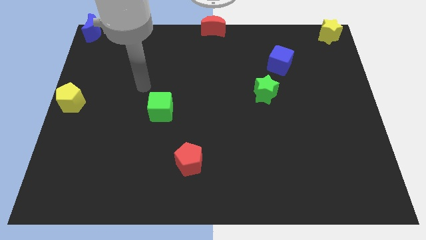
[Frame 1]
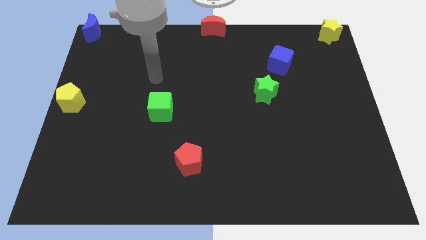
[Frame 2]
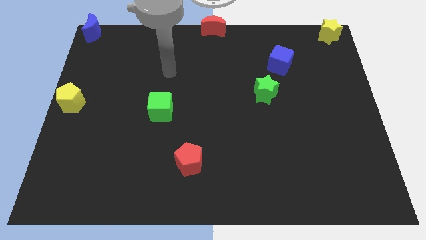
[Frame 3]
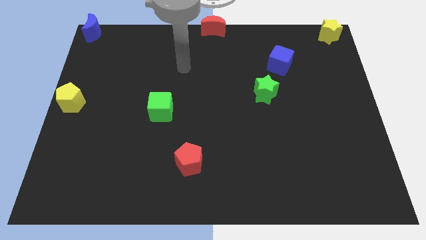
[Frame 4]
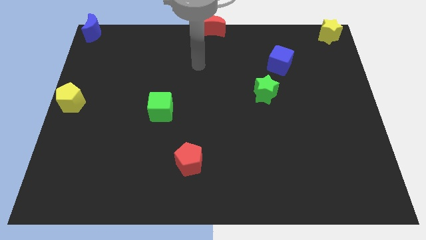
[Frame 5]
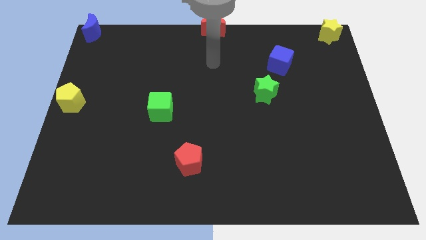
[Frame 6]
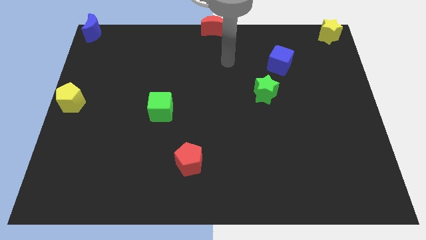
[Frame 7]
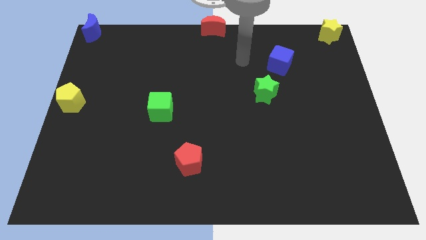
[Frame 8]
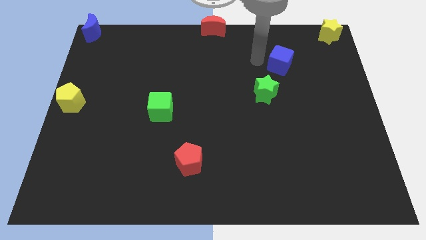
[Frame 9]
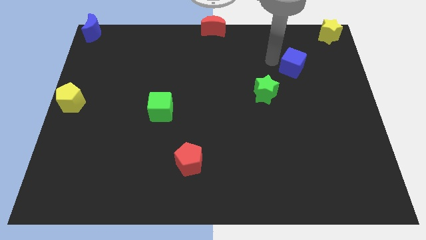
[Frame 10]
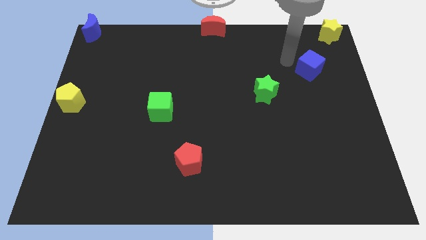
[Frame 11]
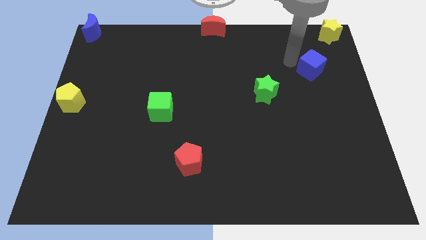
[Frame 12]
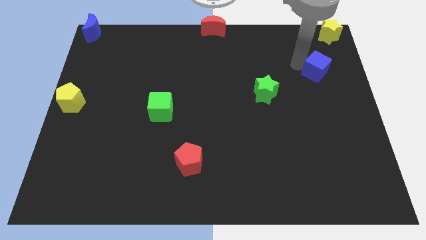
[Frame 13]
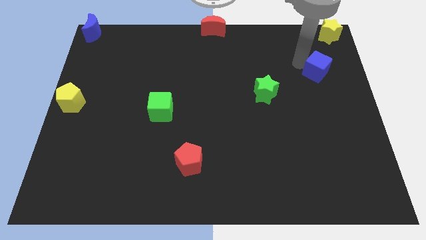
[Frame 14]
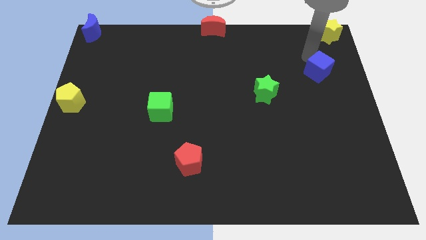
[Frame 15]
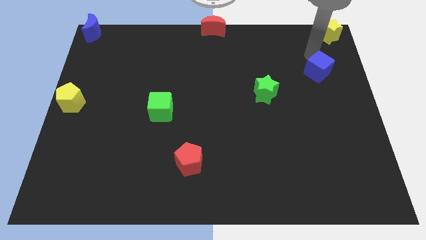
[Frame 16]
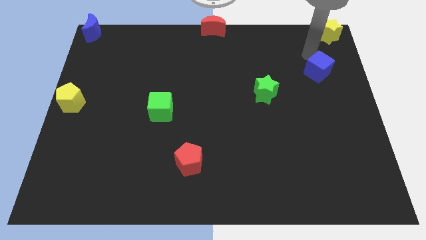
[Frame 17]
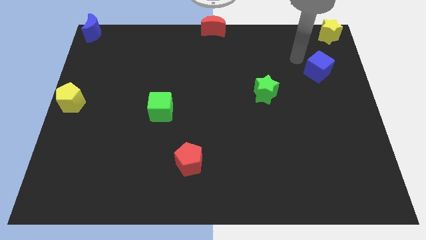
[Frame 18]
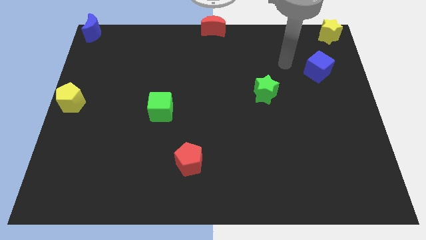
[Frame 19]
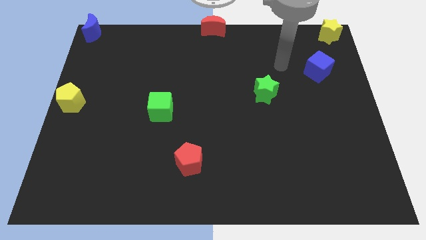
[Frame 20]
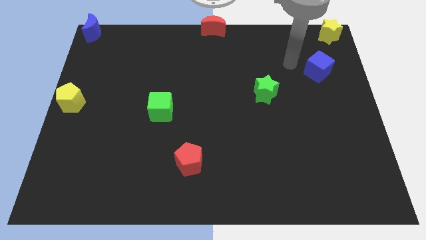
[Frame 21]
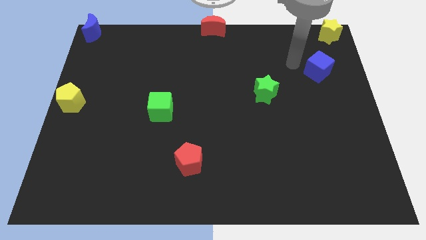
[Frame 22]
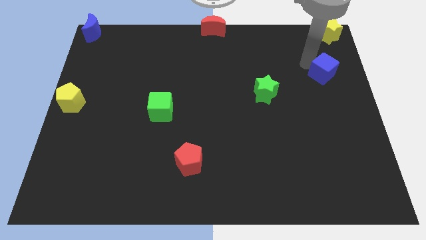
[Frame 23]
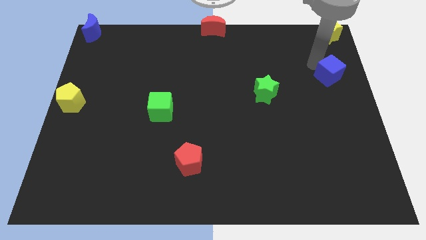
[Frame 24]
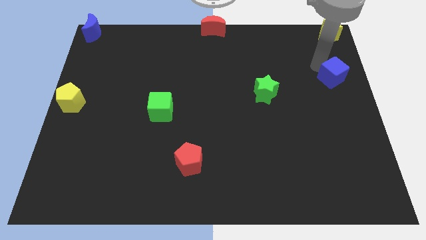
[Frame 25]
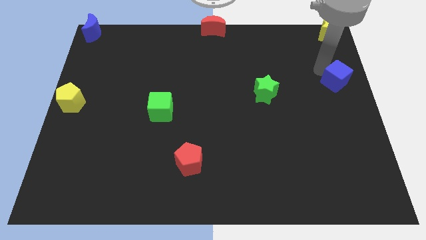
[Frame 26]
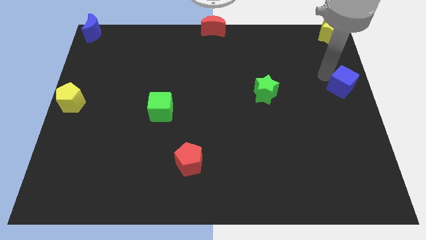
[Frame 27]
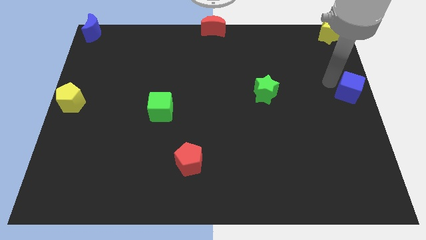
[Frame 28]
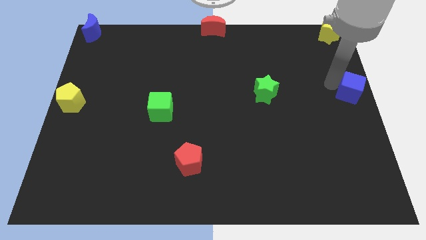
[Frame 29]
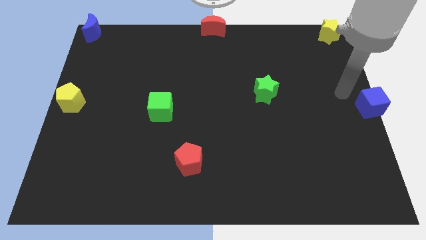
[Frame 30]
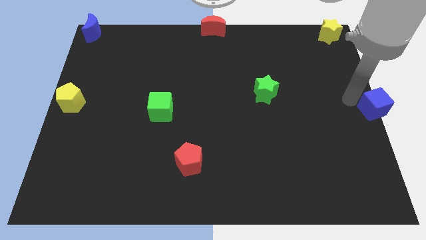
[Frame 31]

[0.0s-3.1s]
move blue cube to the center right

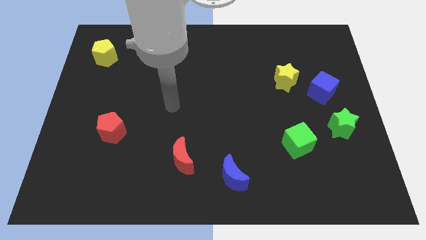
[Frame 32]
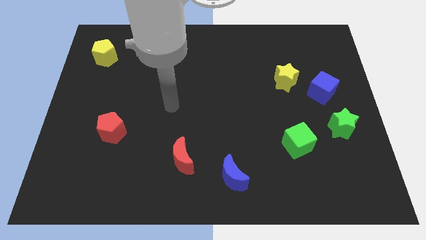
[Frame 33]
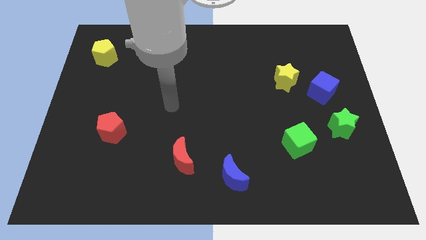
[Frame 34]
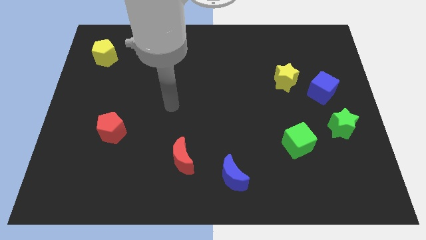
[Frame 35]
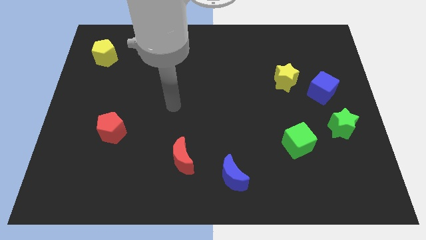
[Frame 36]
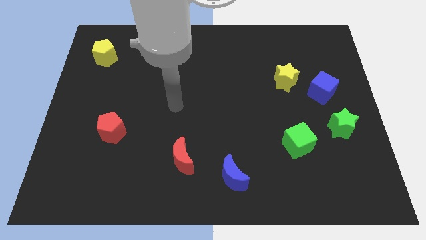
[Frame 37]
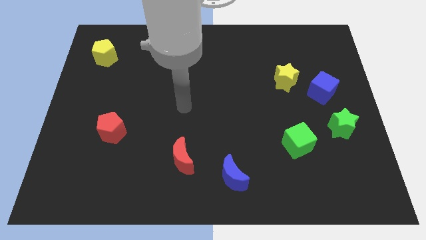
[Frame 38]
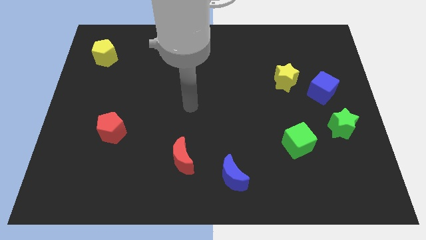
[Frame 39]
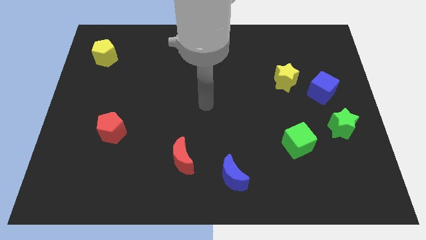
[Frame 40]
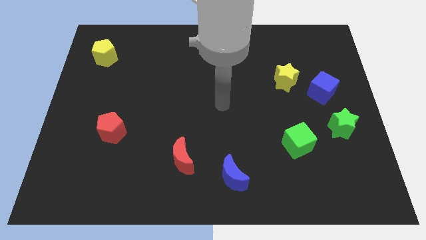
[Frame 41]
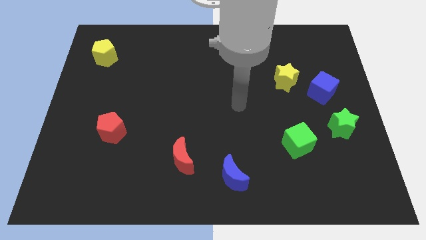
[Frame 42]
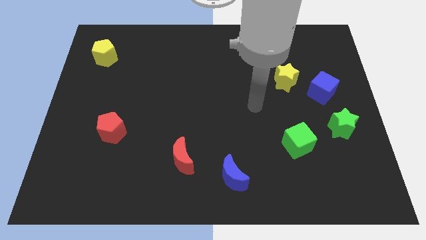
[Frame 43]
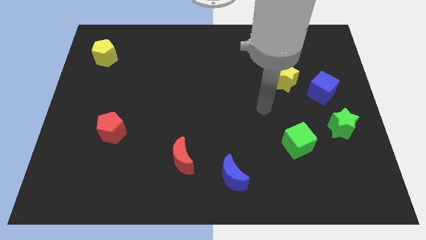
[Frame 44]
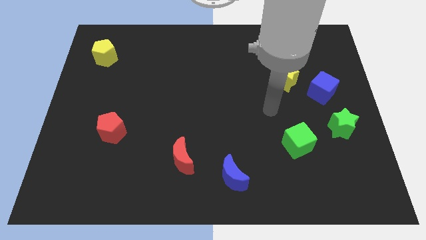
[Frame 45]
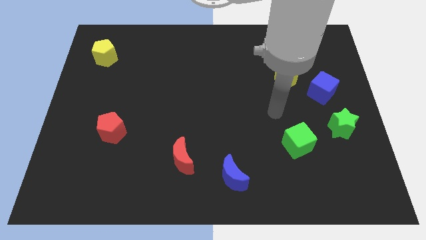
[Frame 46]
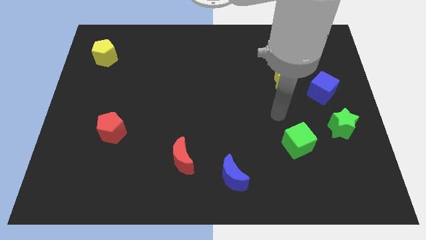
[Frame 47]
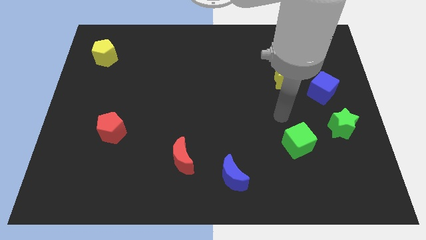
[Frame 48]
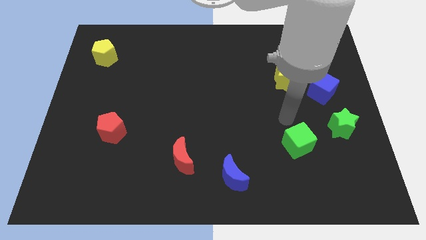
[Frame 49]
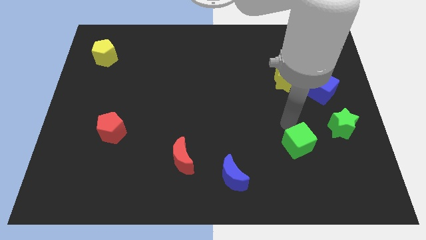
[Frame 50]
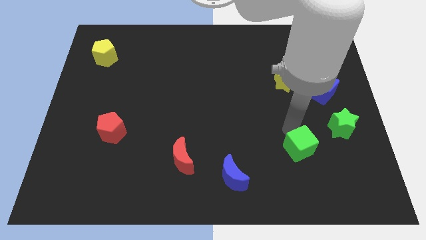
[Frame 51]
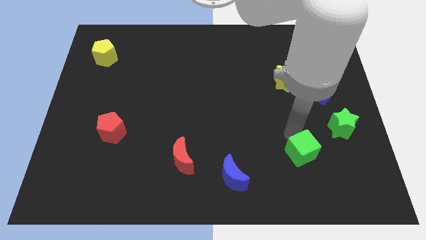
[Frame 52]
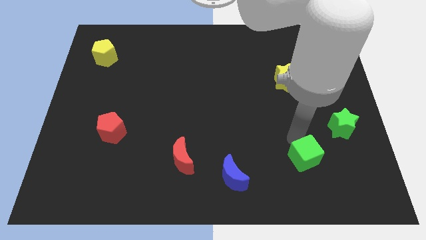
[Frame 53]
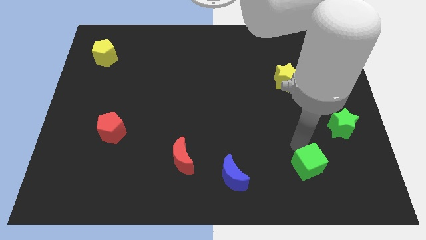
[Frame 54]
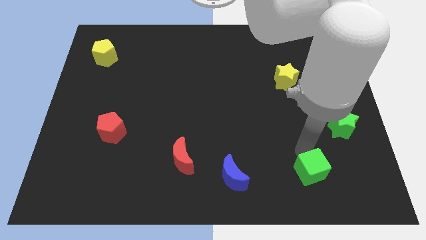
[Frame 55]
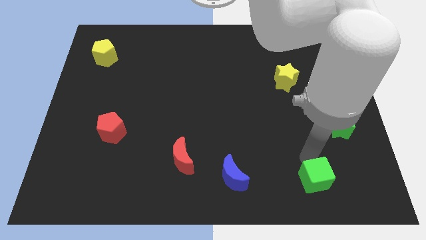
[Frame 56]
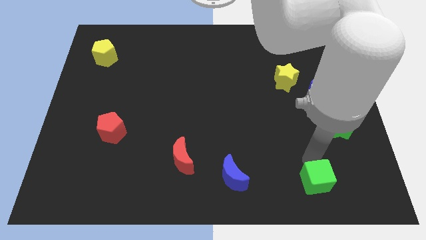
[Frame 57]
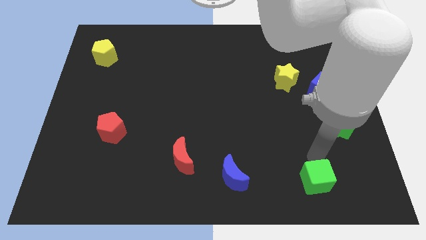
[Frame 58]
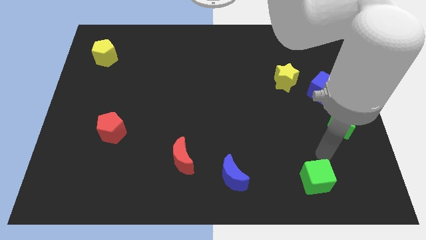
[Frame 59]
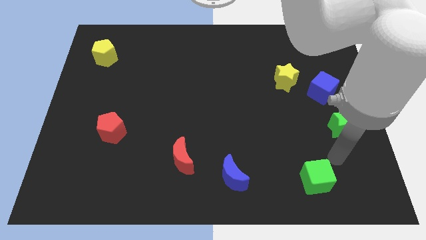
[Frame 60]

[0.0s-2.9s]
push the green cube slightly down

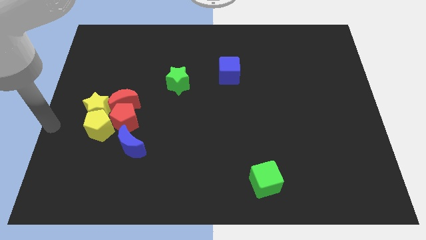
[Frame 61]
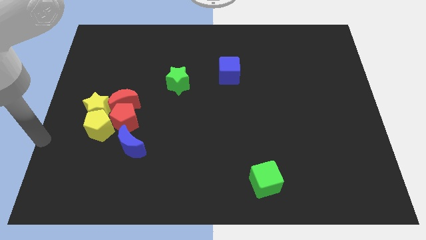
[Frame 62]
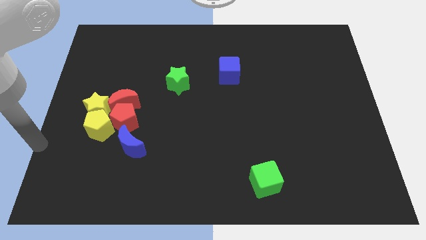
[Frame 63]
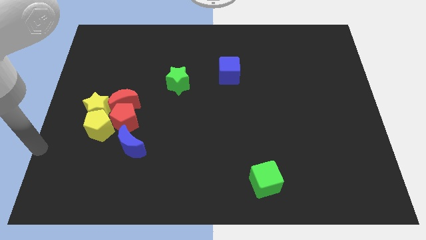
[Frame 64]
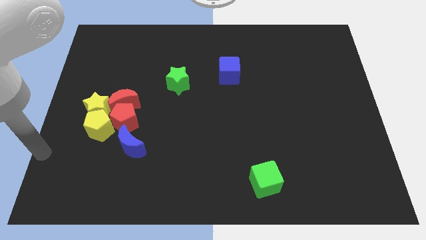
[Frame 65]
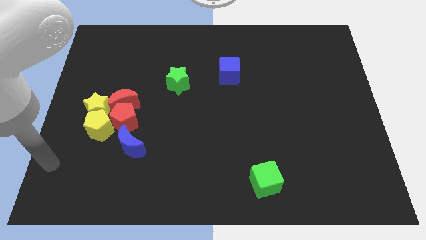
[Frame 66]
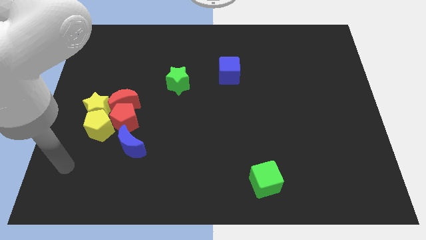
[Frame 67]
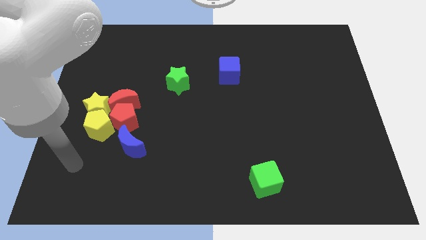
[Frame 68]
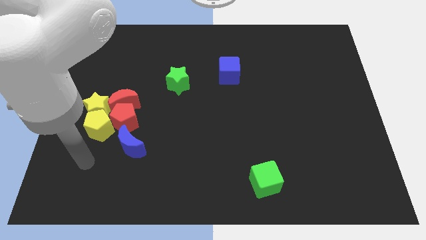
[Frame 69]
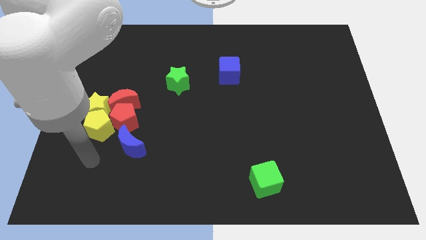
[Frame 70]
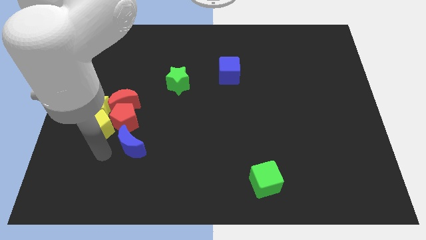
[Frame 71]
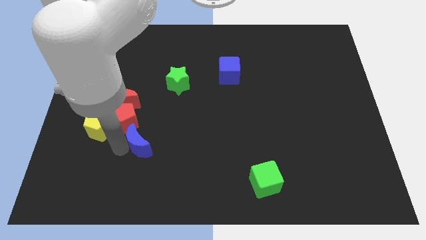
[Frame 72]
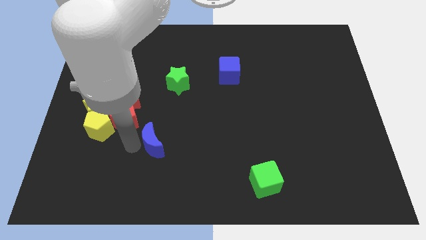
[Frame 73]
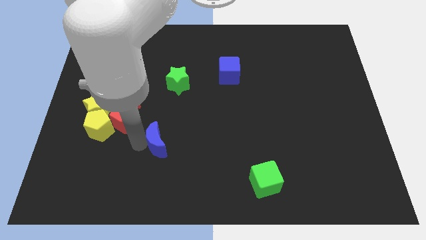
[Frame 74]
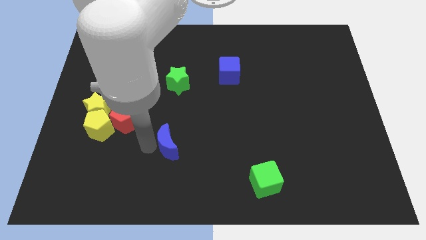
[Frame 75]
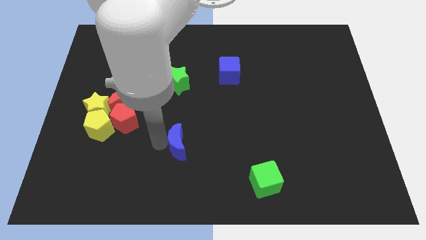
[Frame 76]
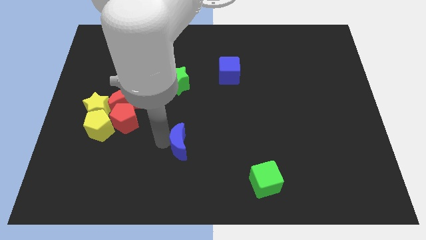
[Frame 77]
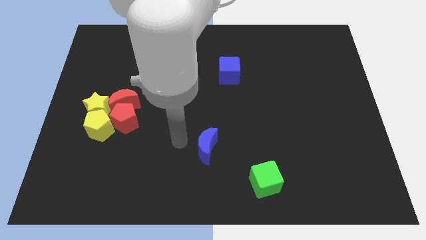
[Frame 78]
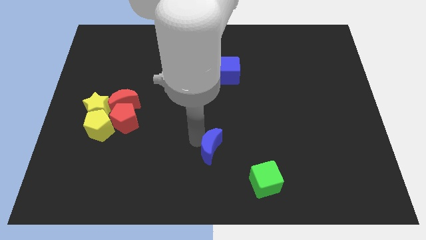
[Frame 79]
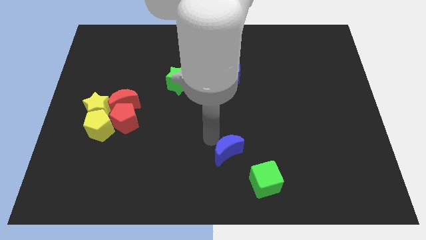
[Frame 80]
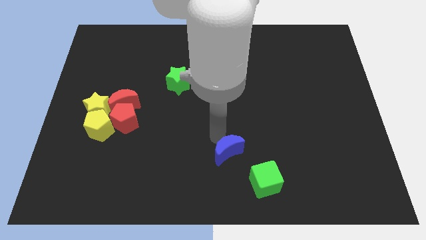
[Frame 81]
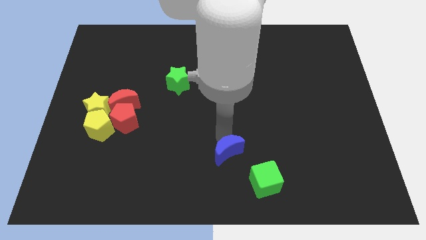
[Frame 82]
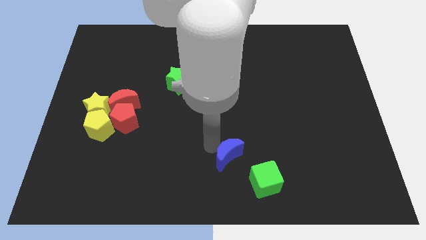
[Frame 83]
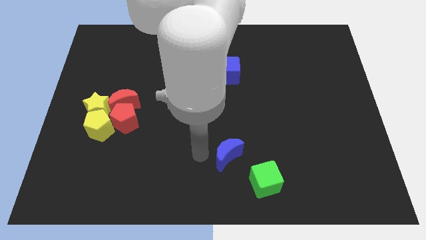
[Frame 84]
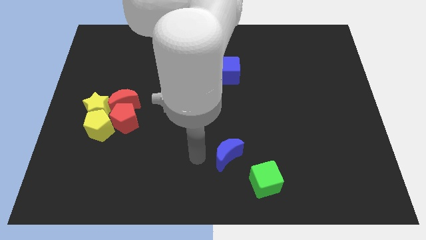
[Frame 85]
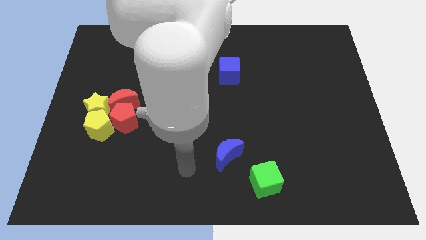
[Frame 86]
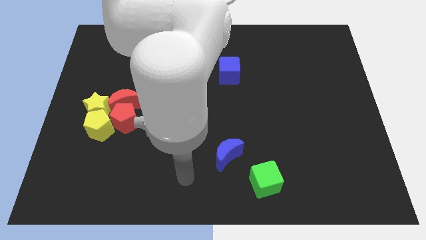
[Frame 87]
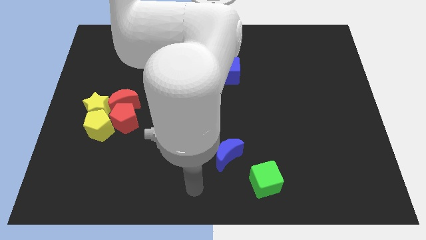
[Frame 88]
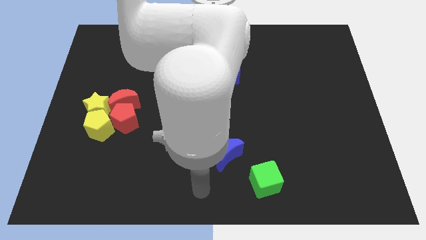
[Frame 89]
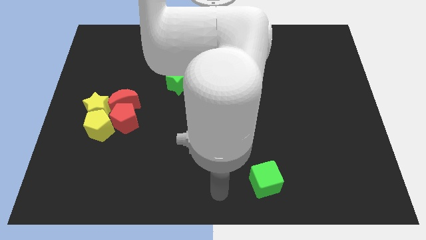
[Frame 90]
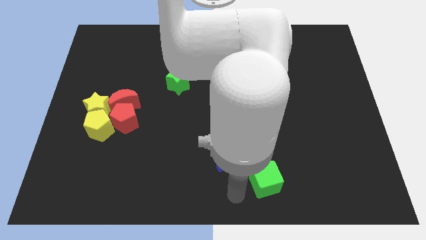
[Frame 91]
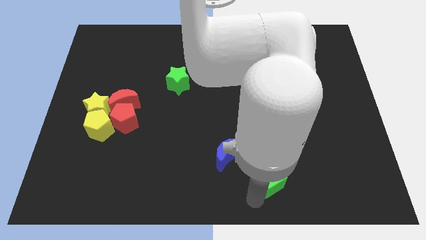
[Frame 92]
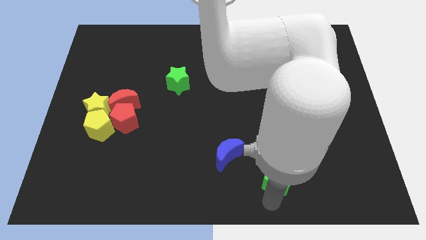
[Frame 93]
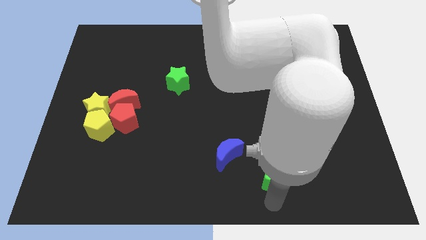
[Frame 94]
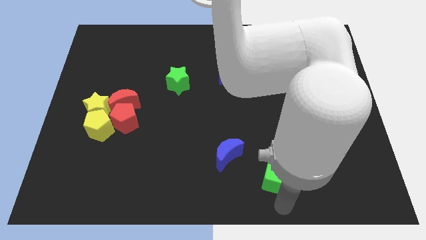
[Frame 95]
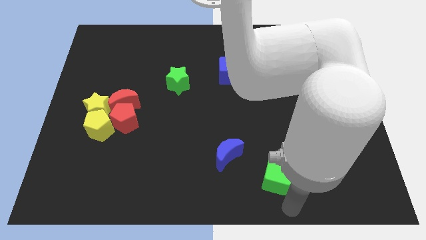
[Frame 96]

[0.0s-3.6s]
push the blue crescent near to the green cube
